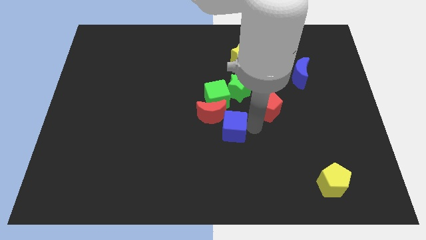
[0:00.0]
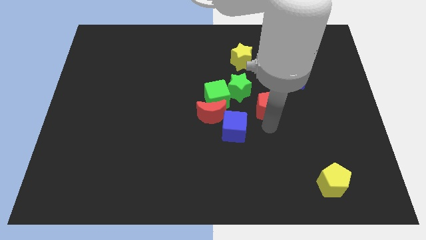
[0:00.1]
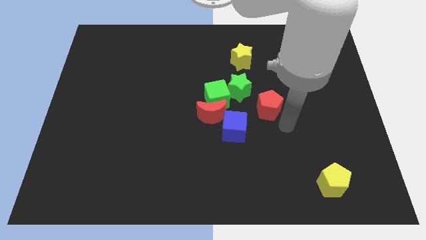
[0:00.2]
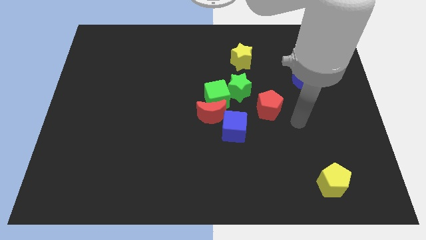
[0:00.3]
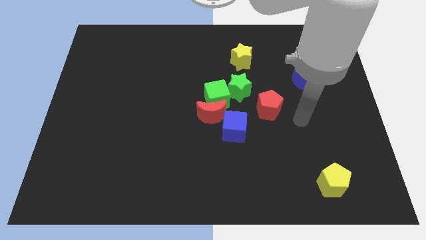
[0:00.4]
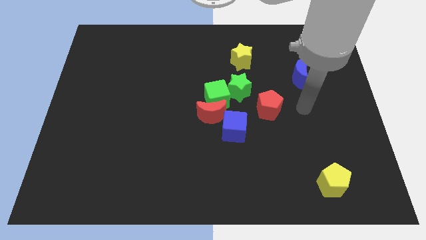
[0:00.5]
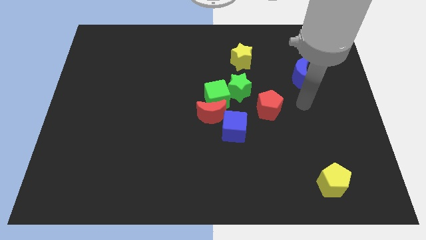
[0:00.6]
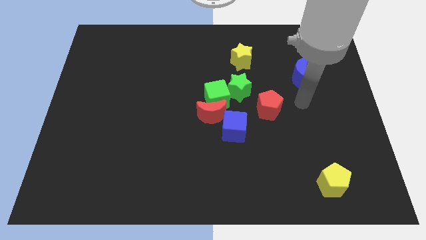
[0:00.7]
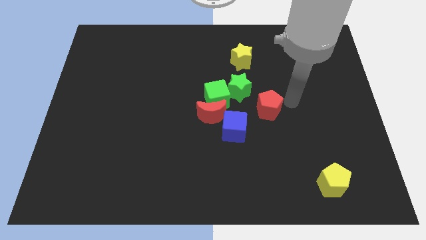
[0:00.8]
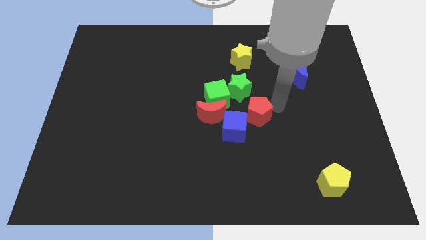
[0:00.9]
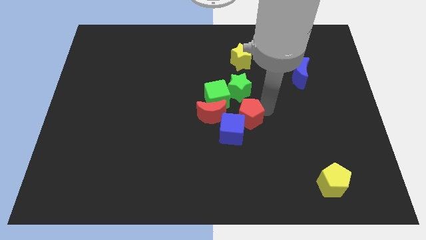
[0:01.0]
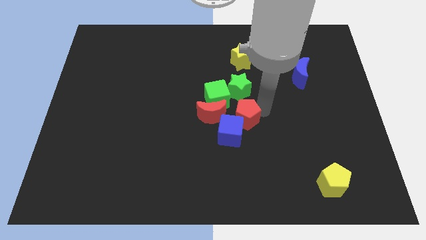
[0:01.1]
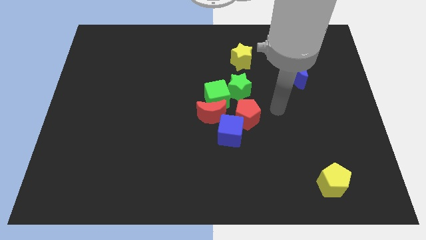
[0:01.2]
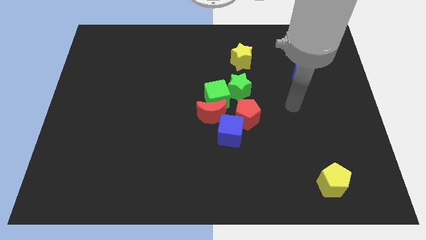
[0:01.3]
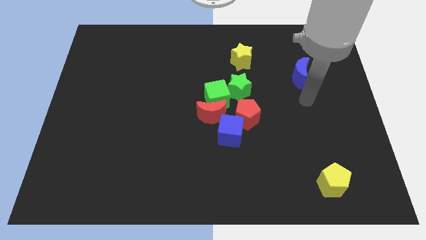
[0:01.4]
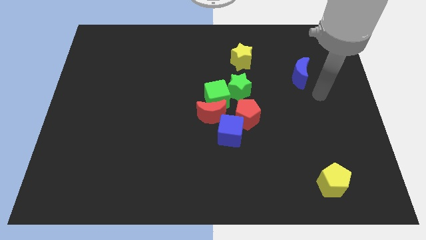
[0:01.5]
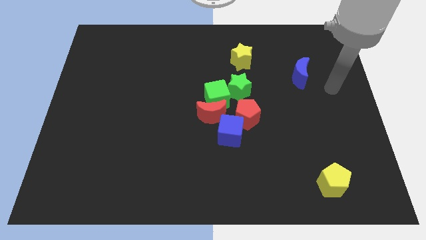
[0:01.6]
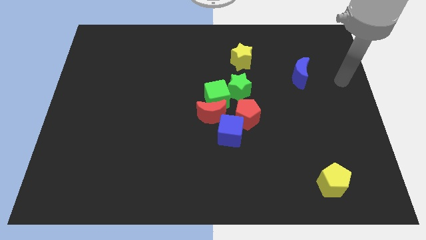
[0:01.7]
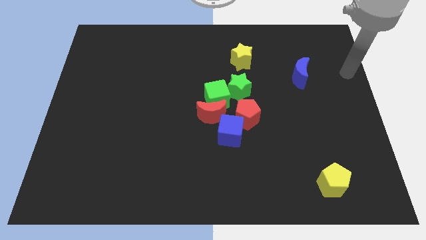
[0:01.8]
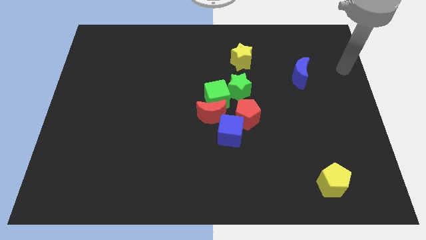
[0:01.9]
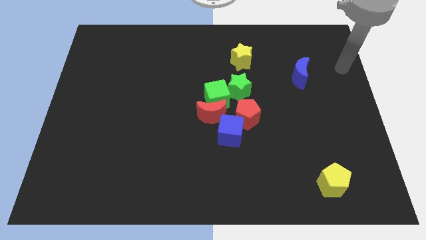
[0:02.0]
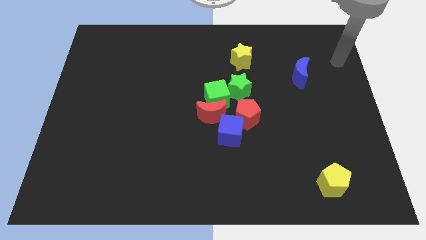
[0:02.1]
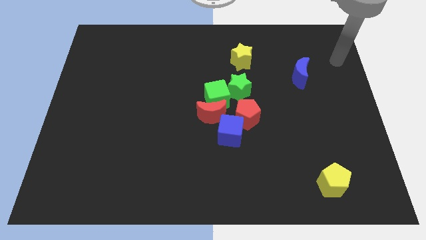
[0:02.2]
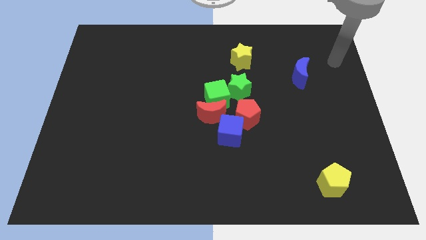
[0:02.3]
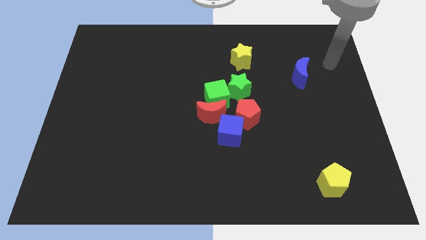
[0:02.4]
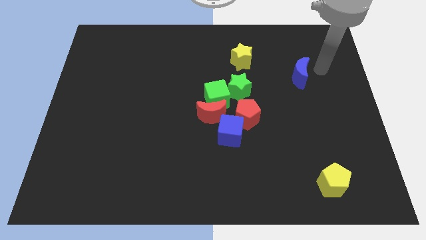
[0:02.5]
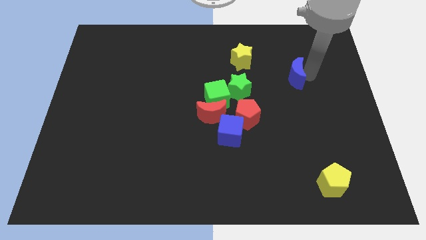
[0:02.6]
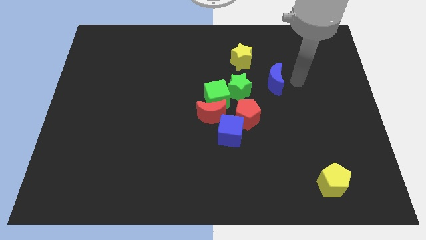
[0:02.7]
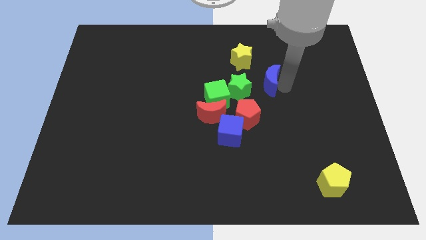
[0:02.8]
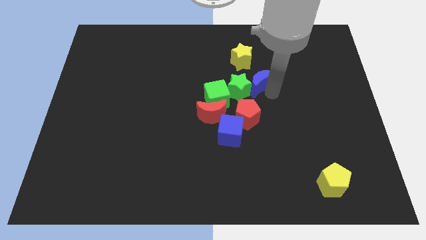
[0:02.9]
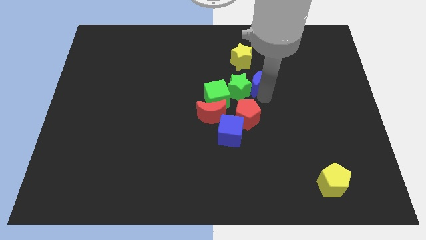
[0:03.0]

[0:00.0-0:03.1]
move the red pentagon to the bottom of the green star

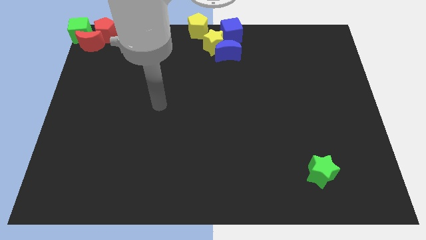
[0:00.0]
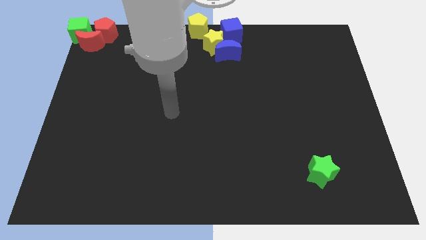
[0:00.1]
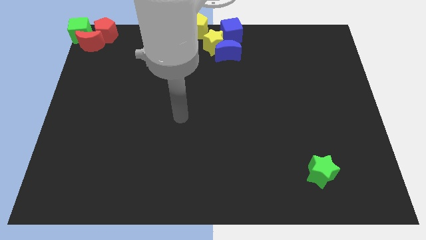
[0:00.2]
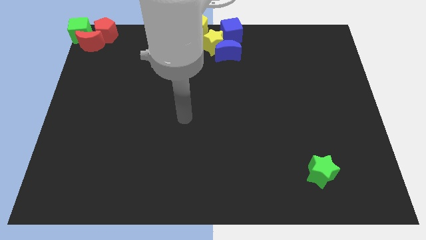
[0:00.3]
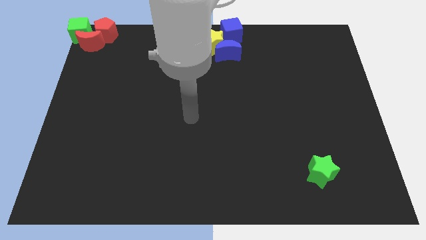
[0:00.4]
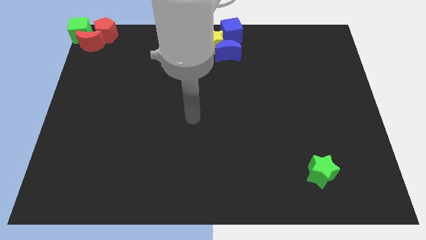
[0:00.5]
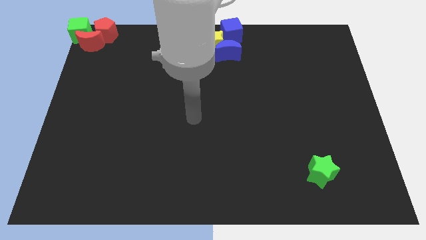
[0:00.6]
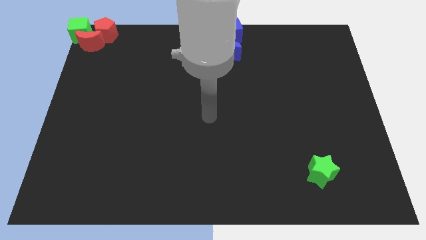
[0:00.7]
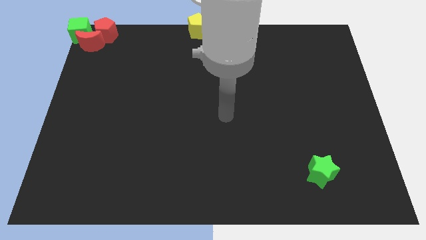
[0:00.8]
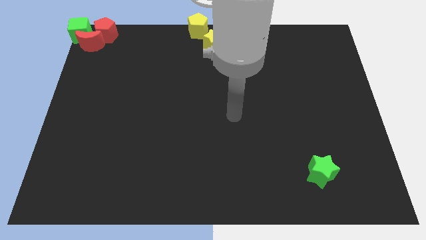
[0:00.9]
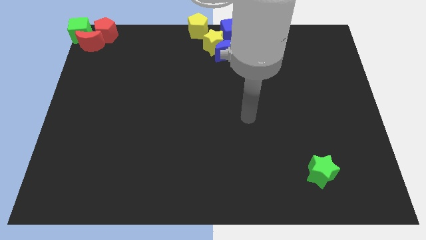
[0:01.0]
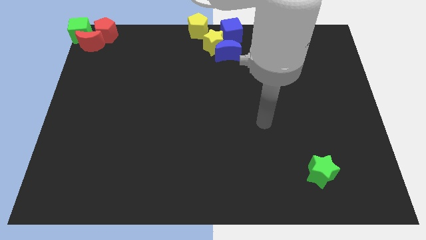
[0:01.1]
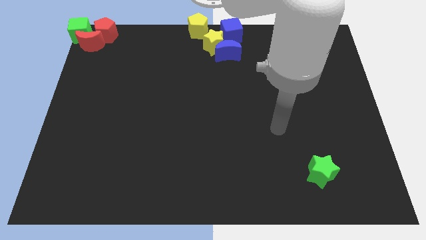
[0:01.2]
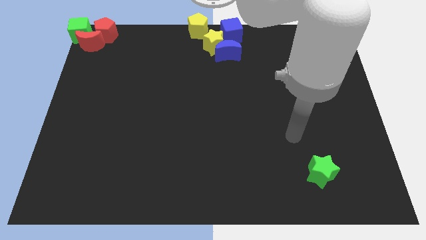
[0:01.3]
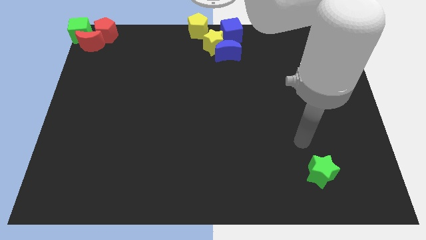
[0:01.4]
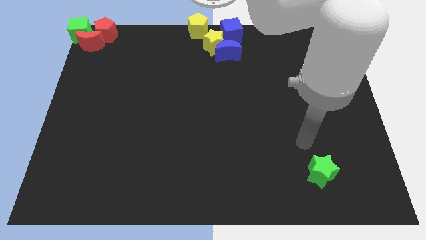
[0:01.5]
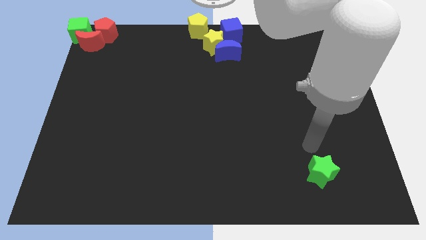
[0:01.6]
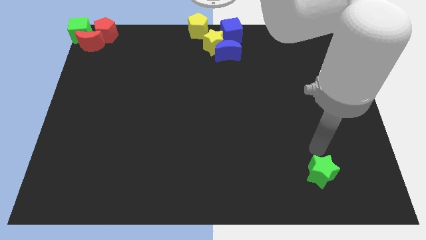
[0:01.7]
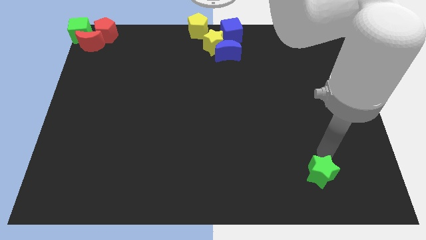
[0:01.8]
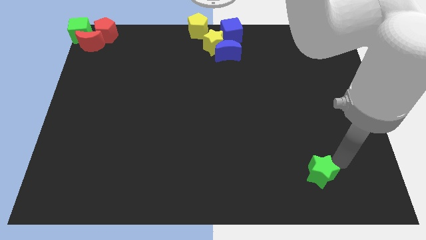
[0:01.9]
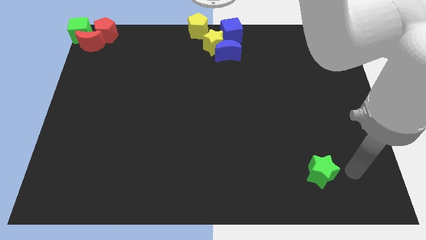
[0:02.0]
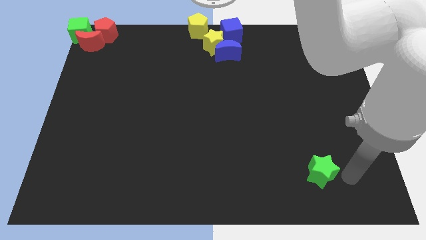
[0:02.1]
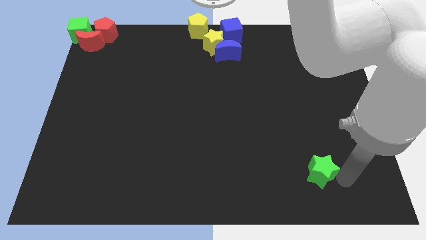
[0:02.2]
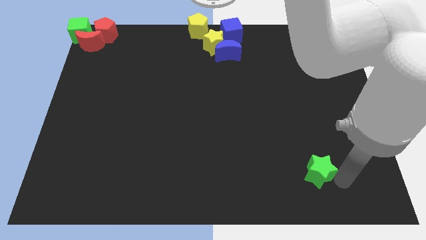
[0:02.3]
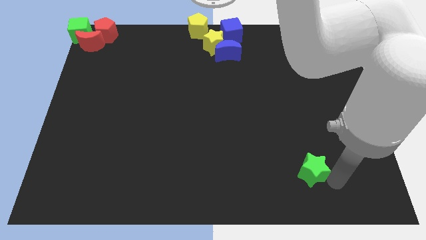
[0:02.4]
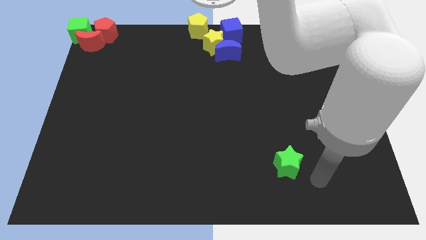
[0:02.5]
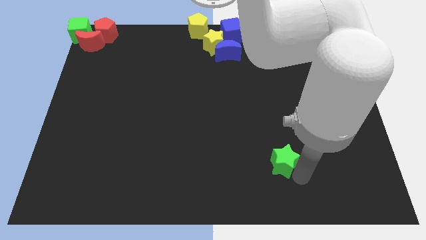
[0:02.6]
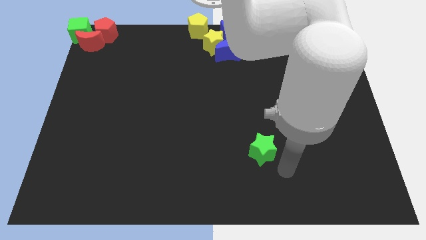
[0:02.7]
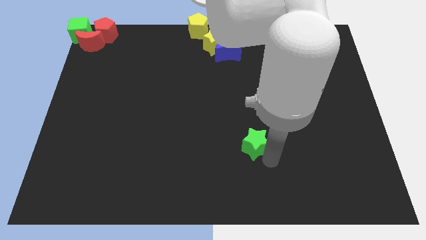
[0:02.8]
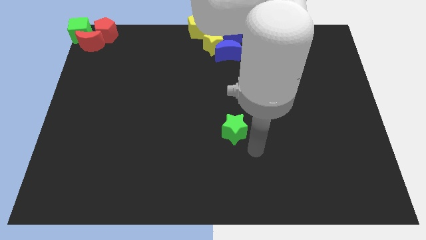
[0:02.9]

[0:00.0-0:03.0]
push green star below blue crescent

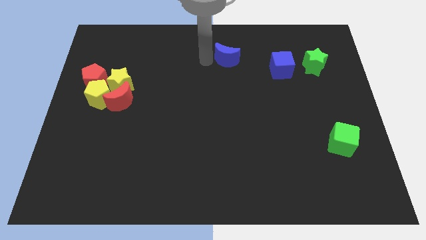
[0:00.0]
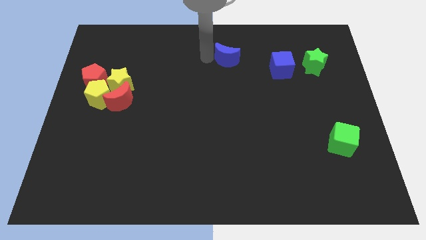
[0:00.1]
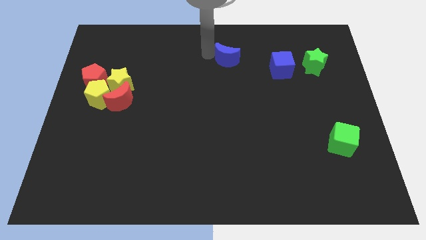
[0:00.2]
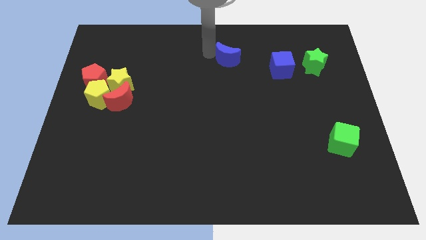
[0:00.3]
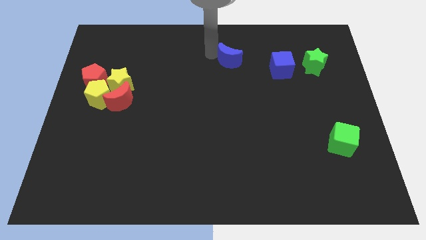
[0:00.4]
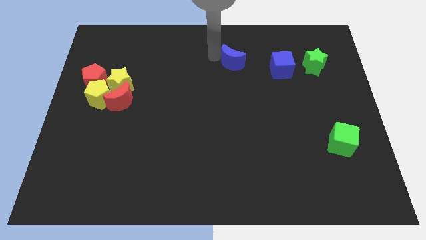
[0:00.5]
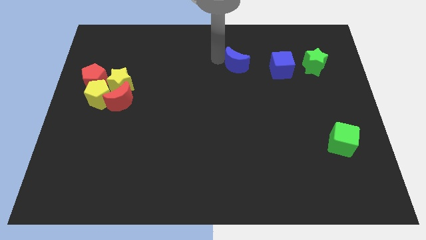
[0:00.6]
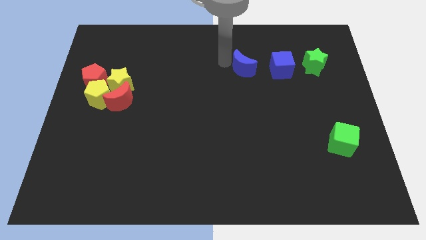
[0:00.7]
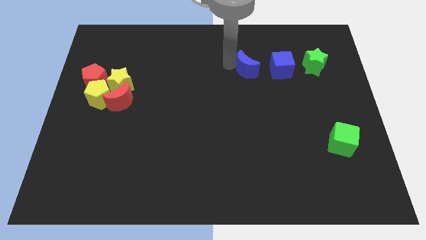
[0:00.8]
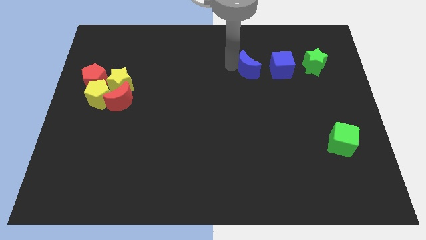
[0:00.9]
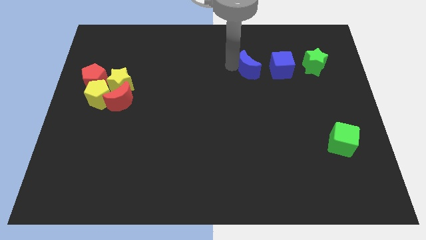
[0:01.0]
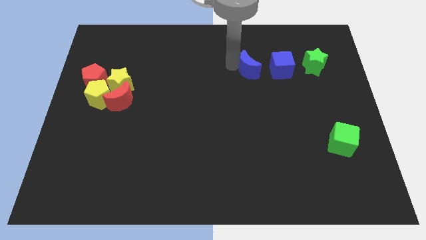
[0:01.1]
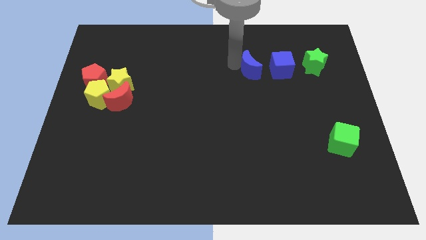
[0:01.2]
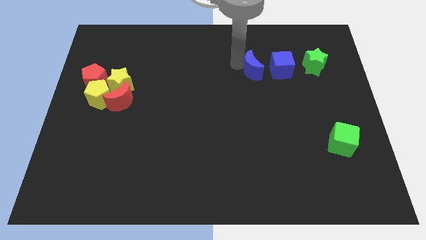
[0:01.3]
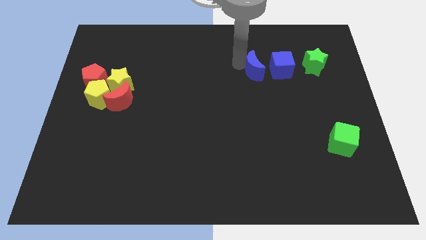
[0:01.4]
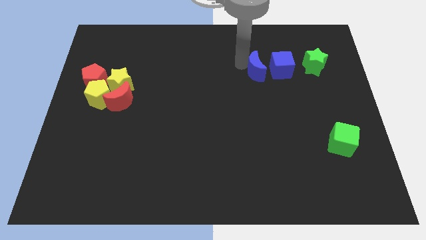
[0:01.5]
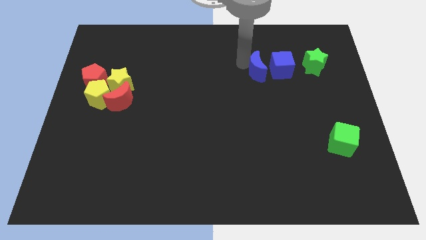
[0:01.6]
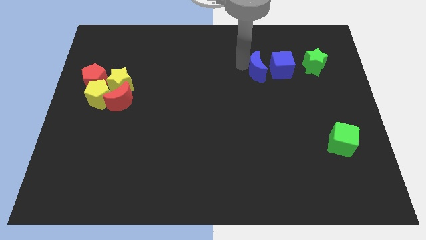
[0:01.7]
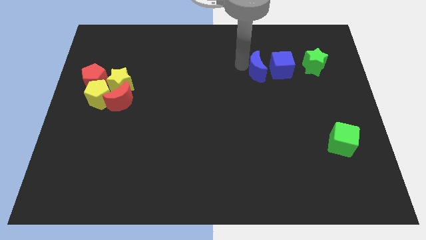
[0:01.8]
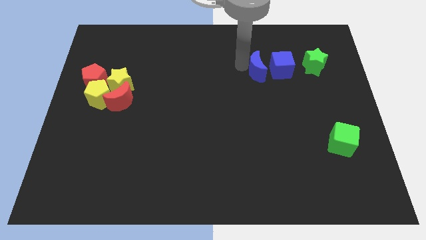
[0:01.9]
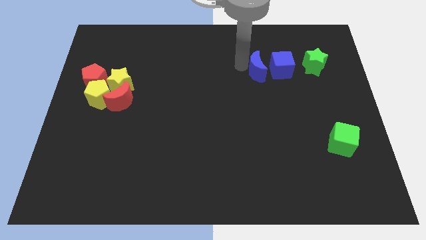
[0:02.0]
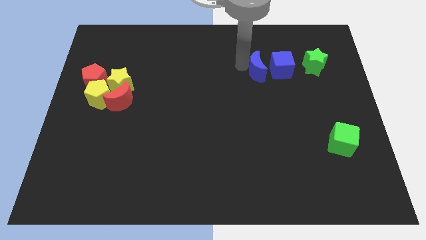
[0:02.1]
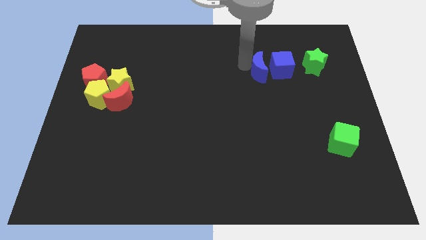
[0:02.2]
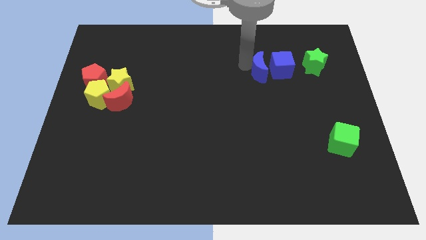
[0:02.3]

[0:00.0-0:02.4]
place blue moon to the left of blue cube

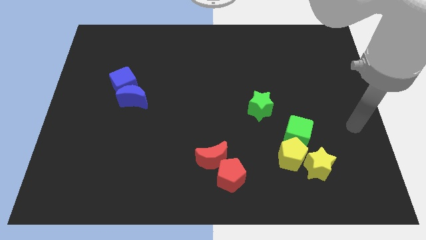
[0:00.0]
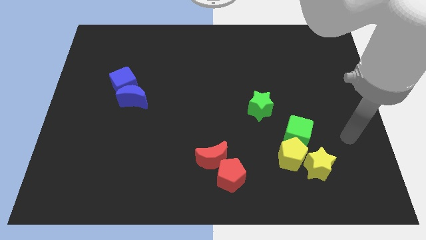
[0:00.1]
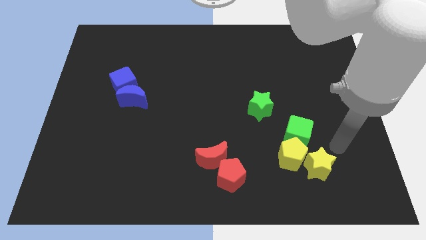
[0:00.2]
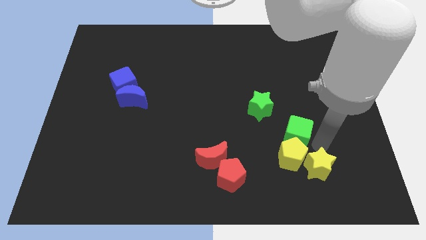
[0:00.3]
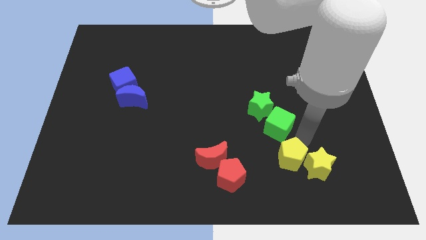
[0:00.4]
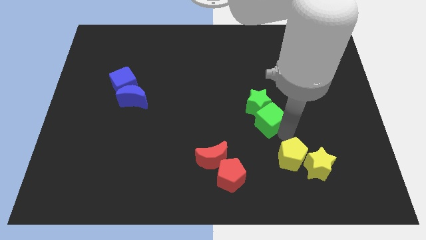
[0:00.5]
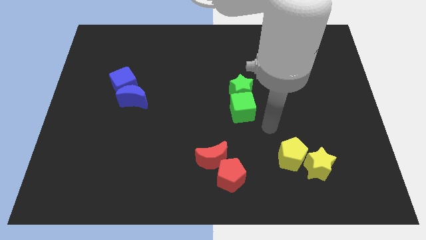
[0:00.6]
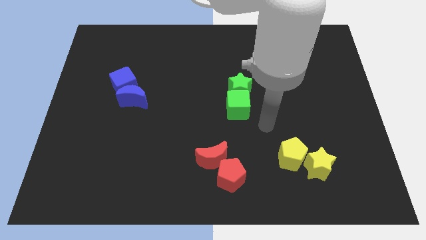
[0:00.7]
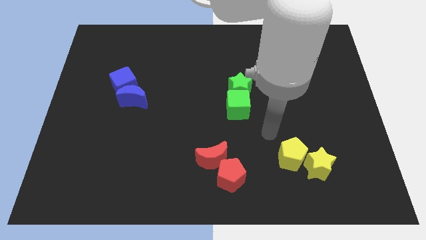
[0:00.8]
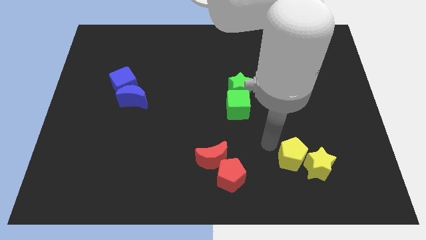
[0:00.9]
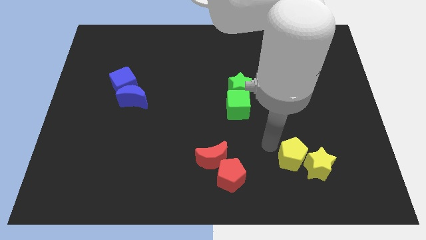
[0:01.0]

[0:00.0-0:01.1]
place green cube to the bottom of green star
